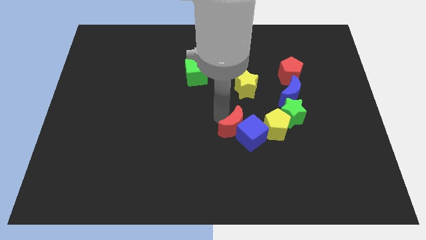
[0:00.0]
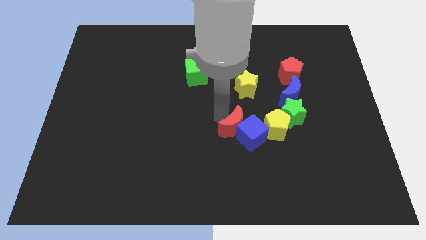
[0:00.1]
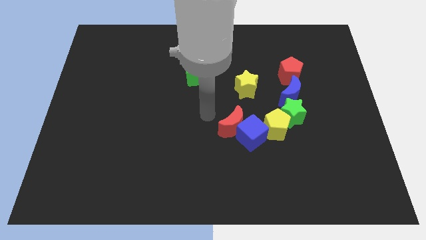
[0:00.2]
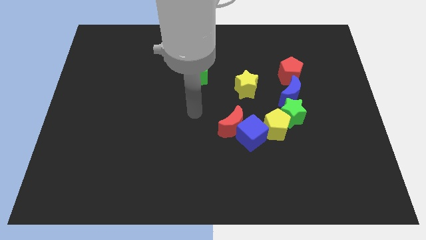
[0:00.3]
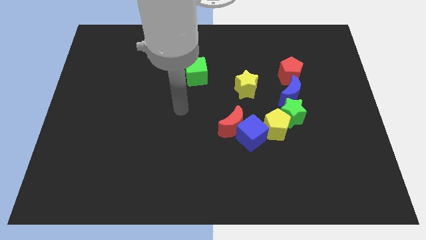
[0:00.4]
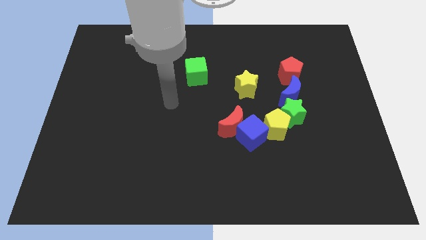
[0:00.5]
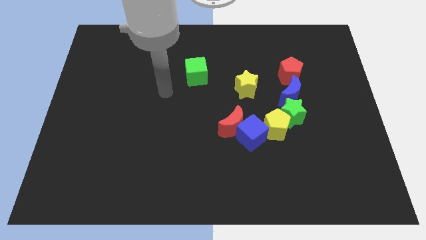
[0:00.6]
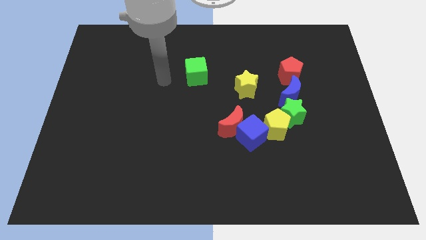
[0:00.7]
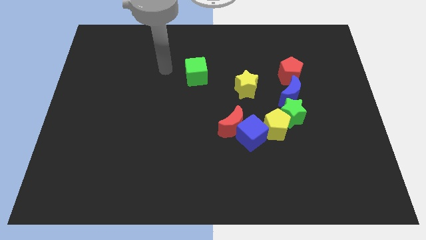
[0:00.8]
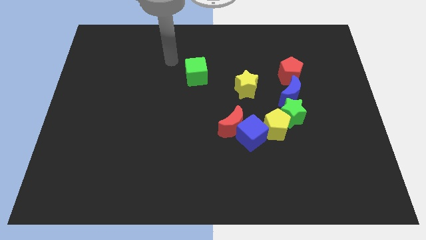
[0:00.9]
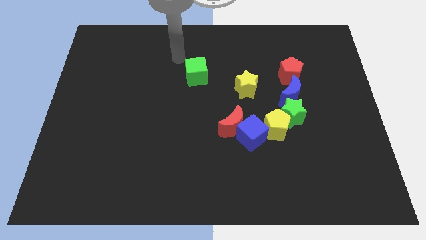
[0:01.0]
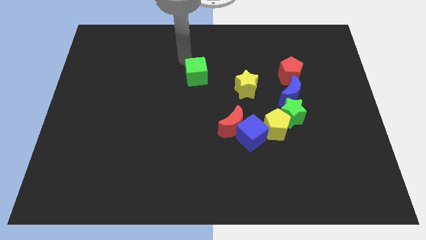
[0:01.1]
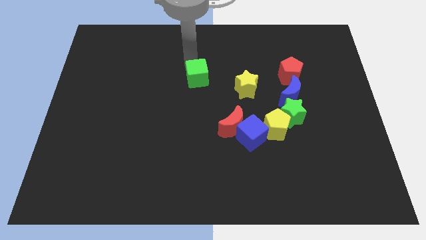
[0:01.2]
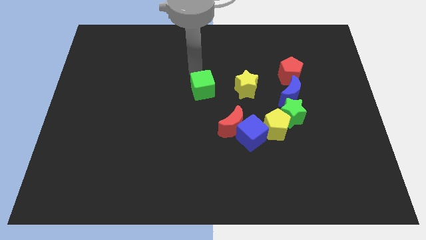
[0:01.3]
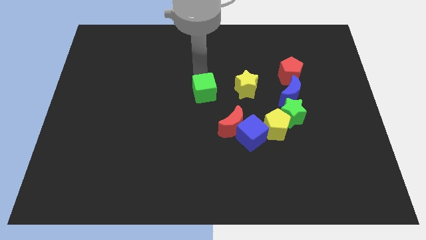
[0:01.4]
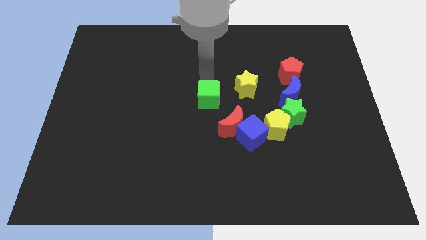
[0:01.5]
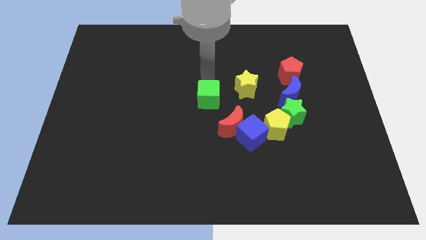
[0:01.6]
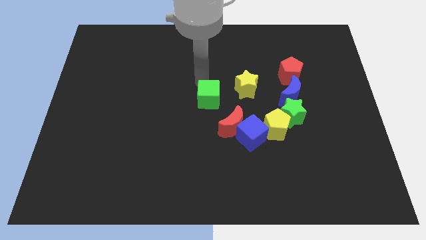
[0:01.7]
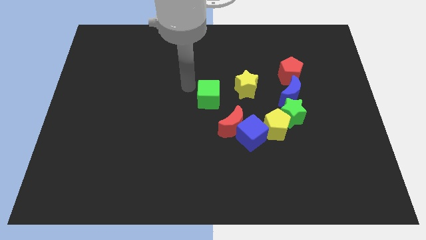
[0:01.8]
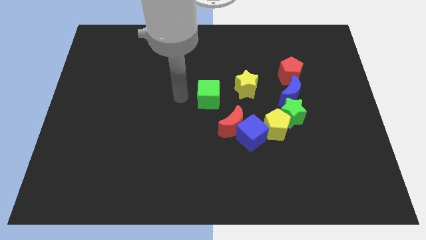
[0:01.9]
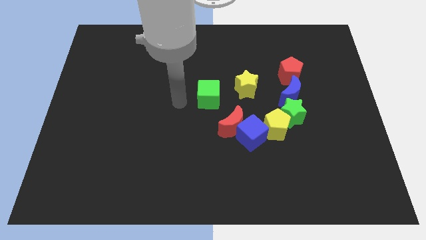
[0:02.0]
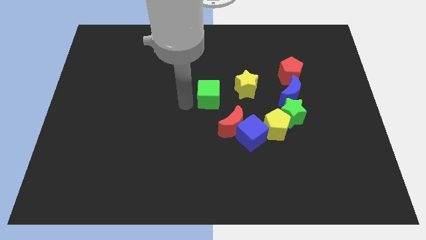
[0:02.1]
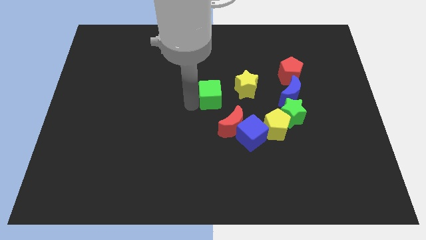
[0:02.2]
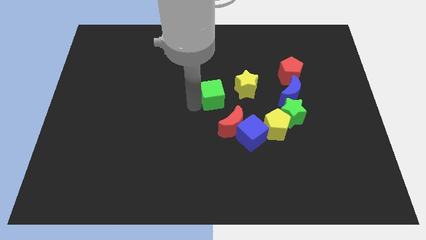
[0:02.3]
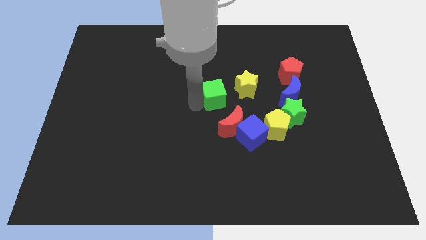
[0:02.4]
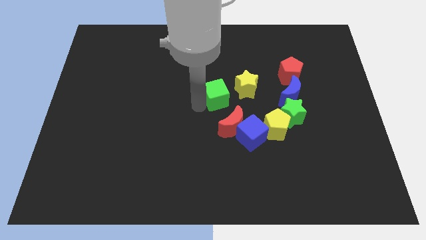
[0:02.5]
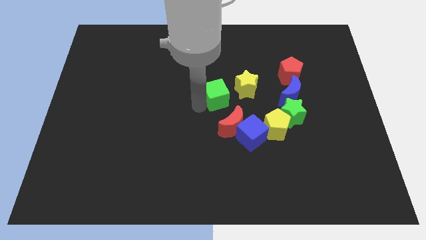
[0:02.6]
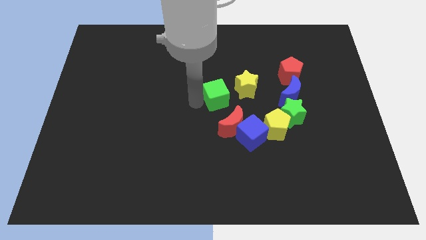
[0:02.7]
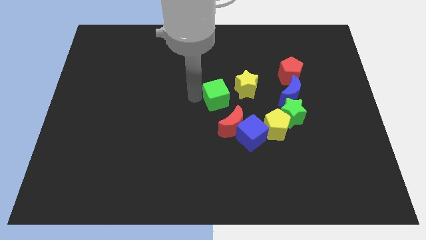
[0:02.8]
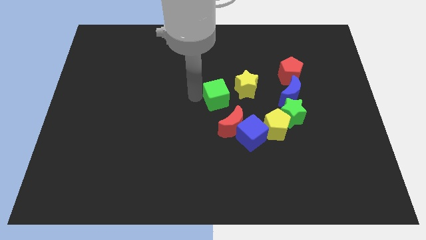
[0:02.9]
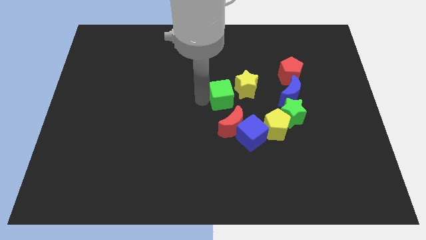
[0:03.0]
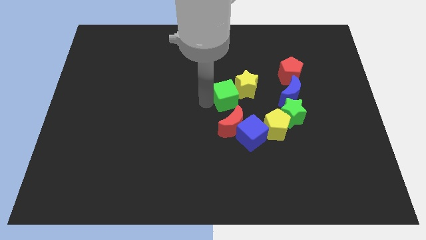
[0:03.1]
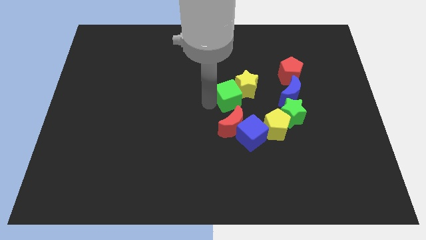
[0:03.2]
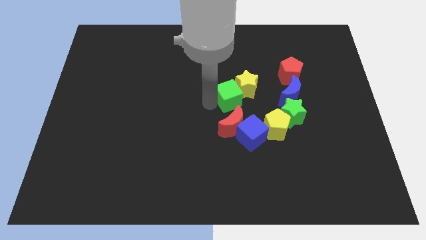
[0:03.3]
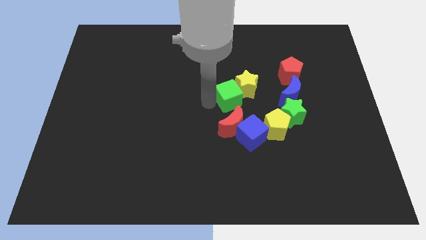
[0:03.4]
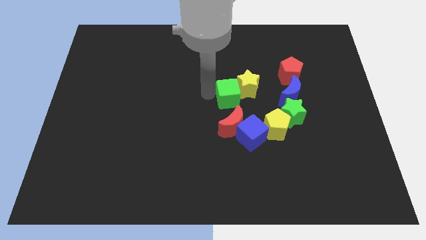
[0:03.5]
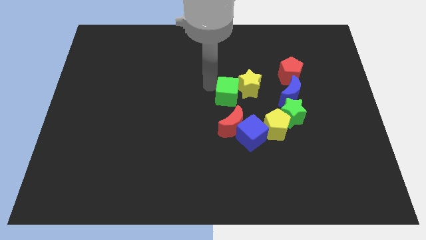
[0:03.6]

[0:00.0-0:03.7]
push green cube to center of the board

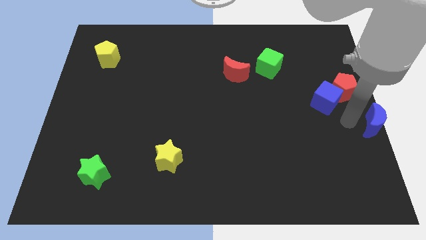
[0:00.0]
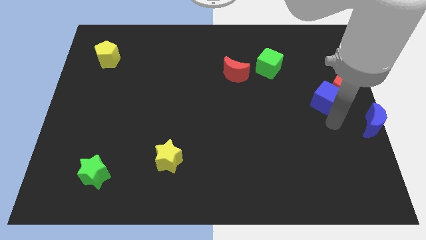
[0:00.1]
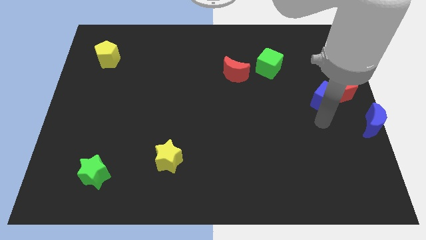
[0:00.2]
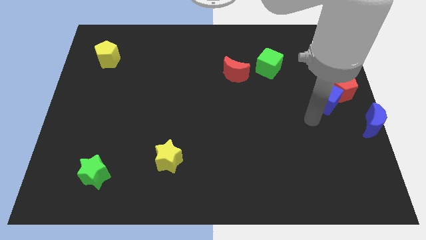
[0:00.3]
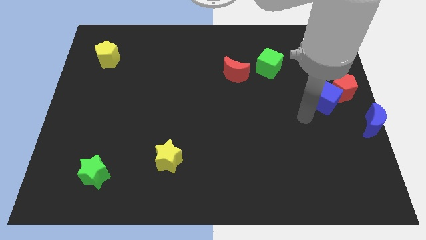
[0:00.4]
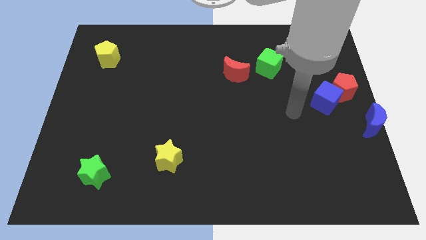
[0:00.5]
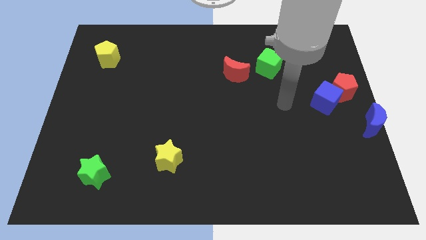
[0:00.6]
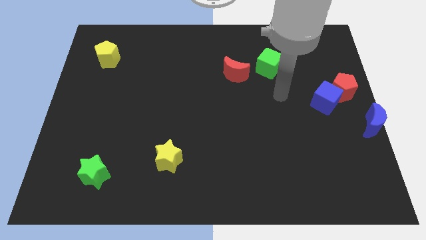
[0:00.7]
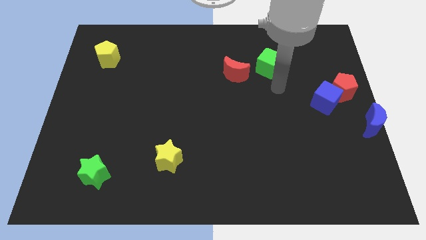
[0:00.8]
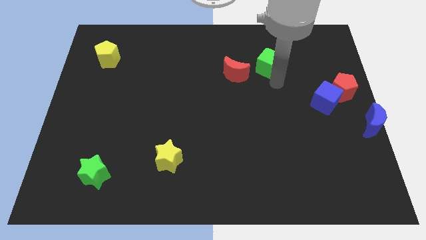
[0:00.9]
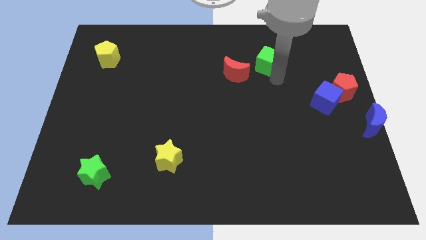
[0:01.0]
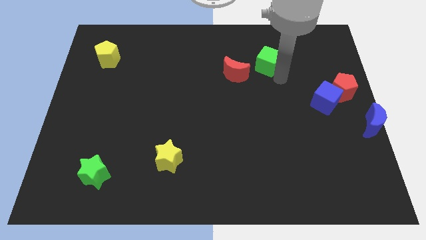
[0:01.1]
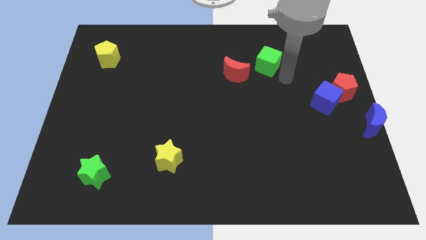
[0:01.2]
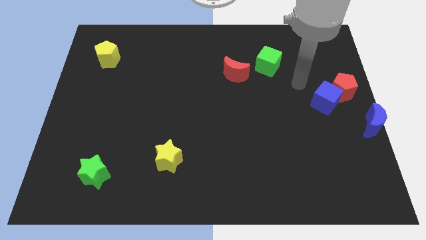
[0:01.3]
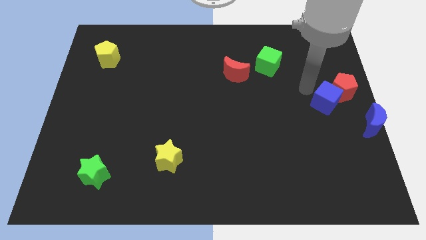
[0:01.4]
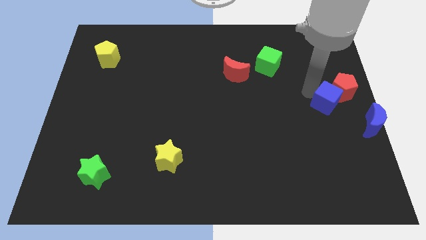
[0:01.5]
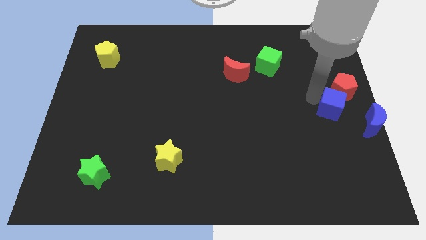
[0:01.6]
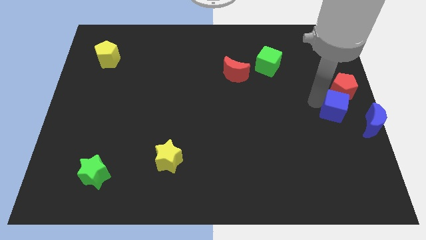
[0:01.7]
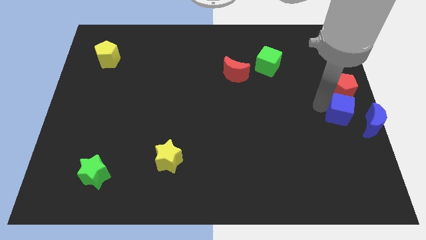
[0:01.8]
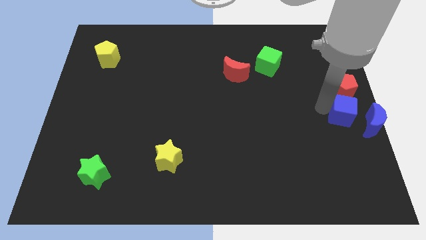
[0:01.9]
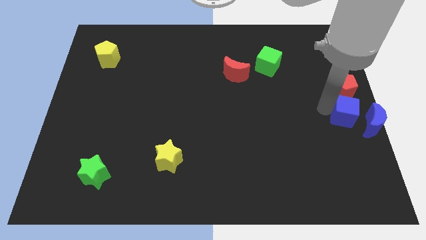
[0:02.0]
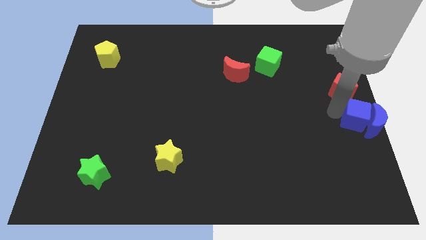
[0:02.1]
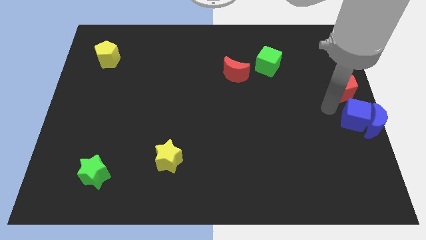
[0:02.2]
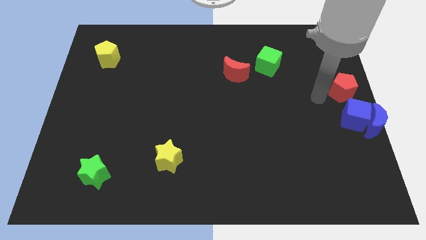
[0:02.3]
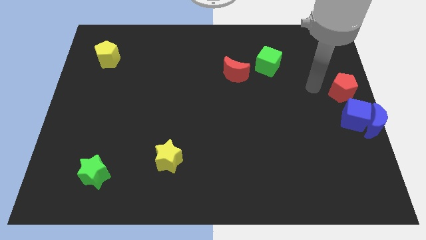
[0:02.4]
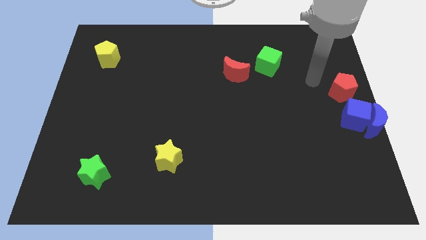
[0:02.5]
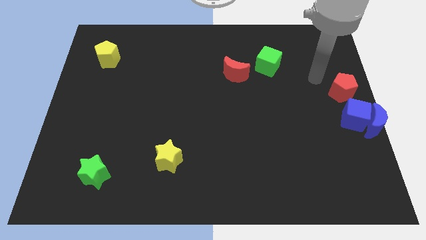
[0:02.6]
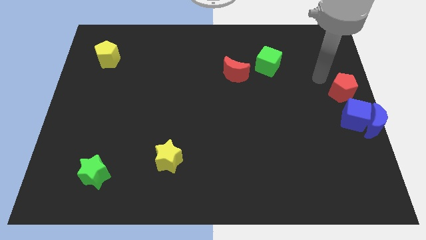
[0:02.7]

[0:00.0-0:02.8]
push the blue cube into blue moon

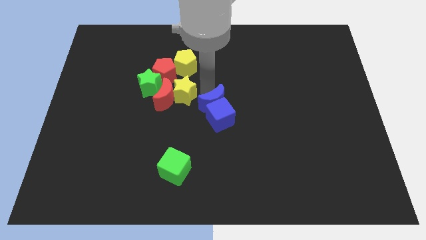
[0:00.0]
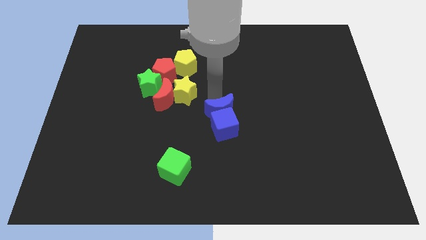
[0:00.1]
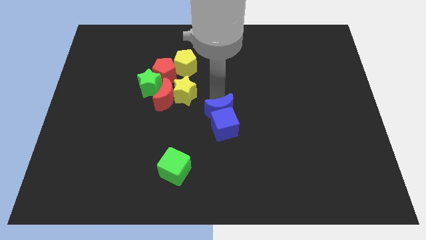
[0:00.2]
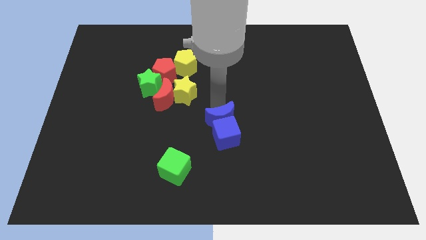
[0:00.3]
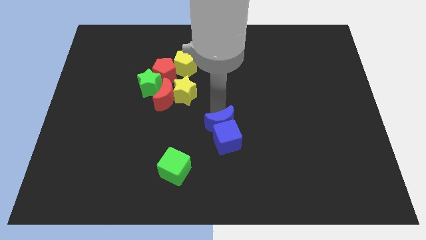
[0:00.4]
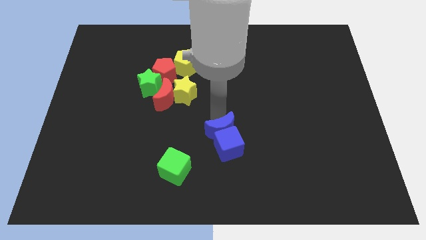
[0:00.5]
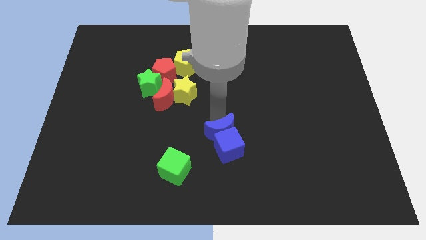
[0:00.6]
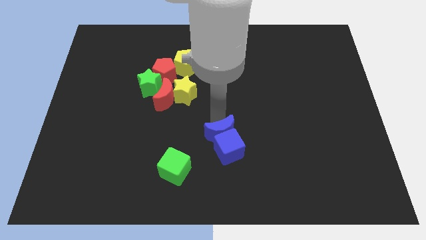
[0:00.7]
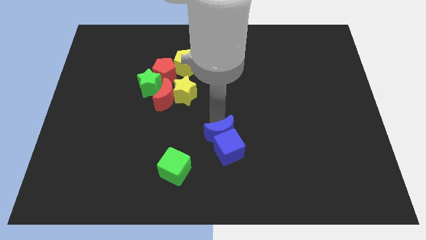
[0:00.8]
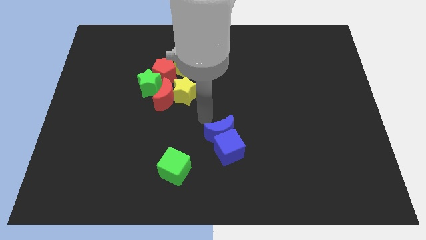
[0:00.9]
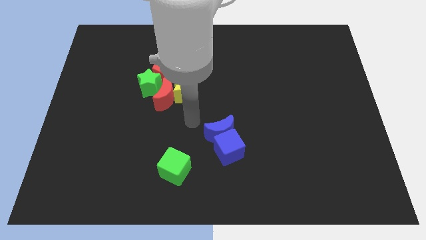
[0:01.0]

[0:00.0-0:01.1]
push the blue blocks slightly to the bottom right side of the board

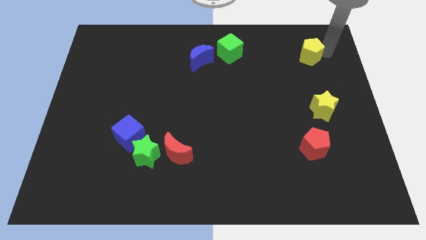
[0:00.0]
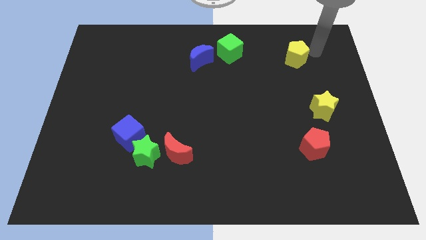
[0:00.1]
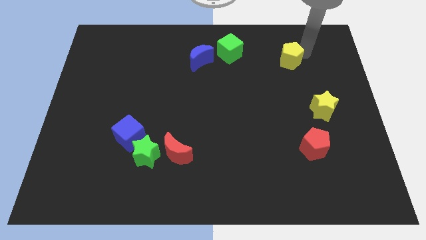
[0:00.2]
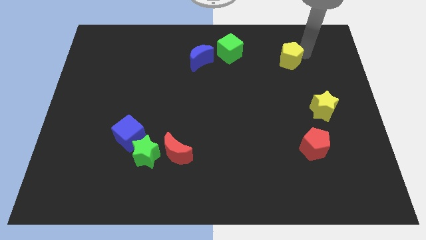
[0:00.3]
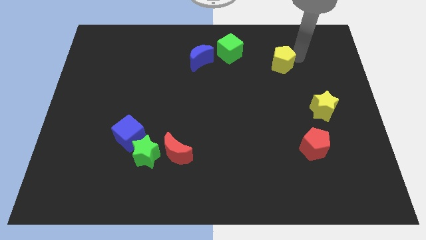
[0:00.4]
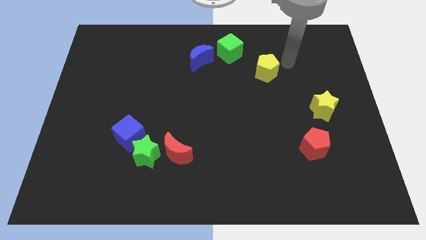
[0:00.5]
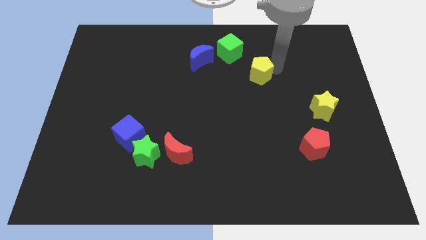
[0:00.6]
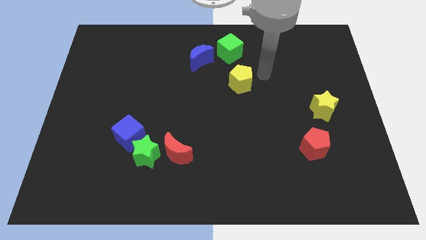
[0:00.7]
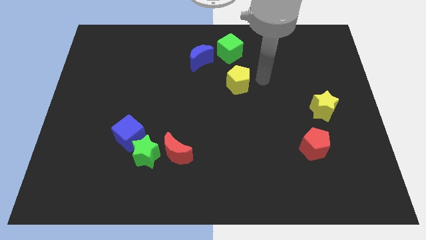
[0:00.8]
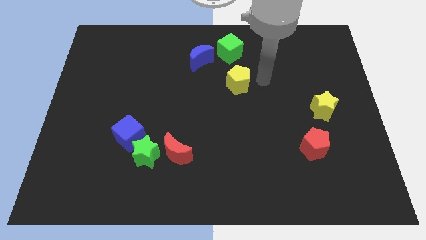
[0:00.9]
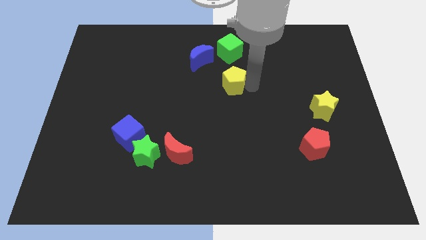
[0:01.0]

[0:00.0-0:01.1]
put the yellow pentagon below the green cube

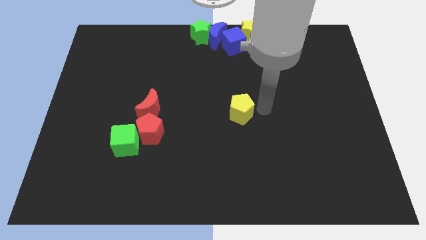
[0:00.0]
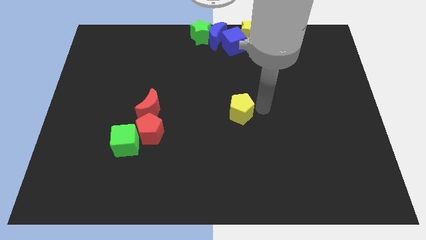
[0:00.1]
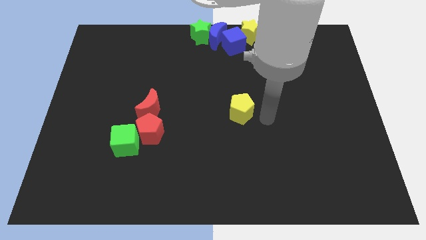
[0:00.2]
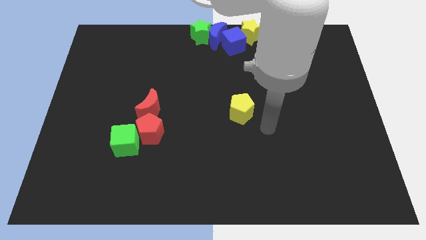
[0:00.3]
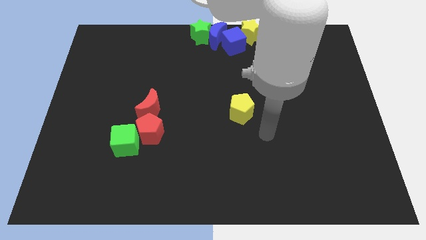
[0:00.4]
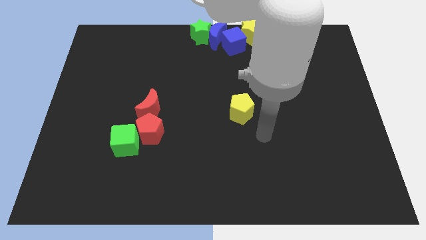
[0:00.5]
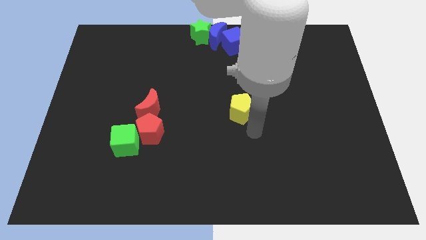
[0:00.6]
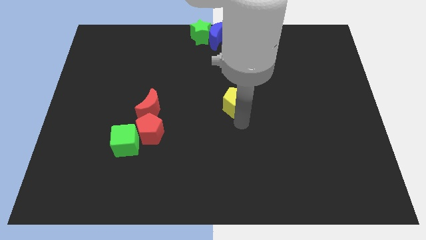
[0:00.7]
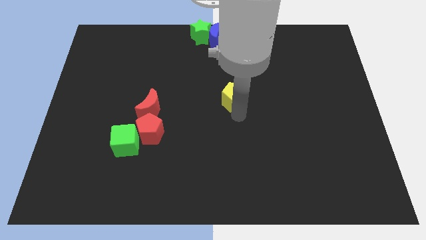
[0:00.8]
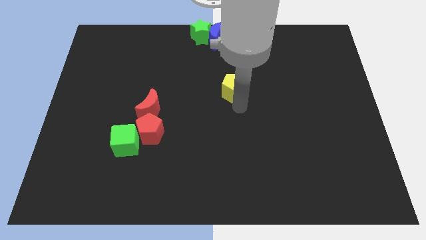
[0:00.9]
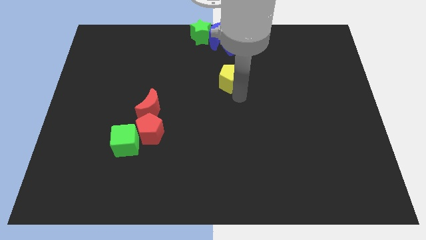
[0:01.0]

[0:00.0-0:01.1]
move the yellow pentagon slightly upwards
